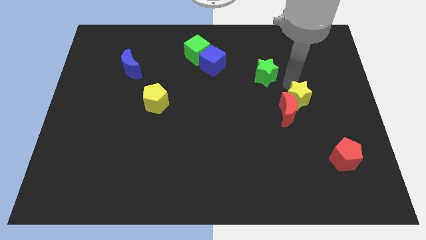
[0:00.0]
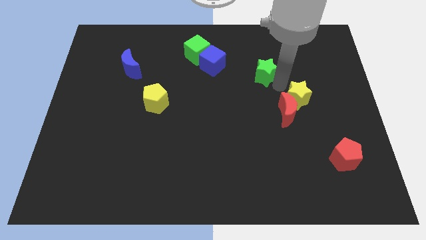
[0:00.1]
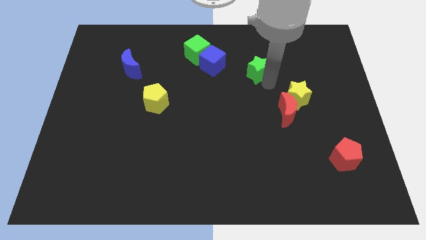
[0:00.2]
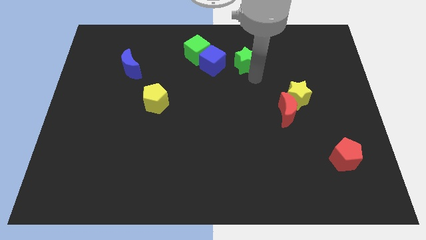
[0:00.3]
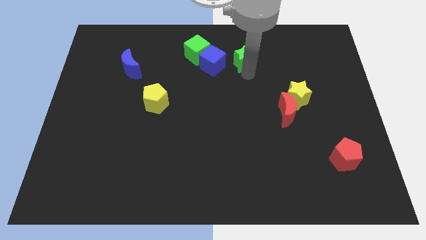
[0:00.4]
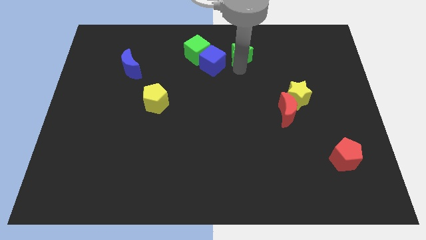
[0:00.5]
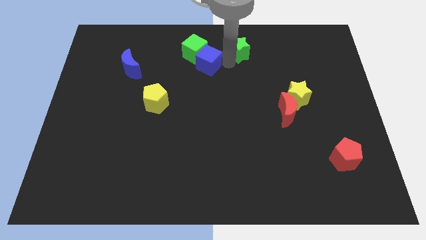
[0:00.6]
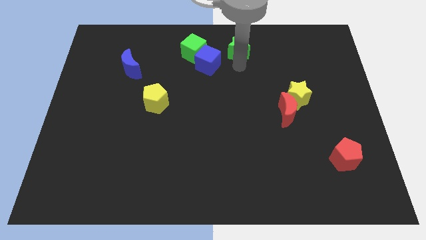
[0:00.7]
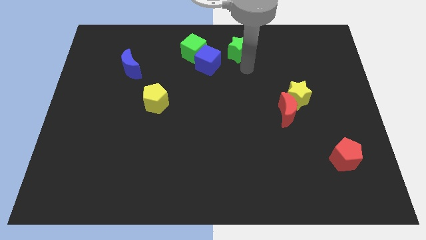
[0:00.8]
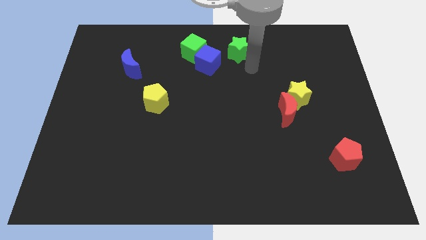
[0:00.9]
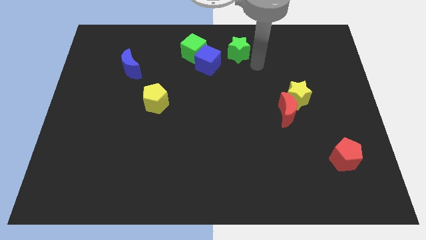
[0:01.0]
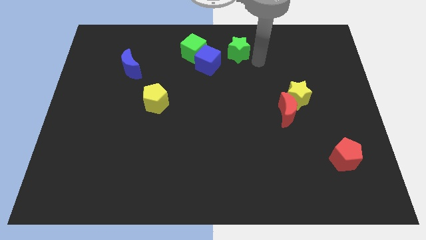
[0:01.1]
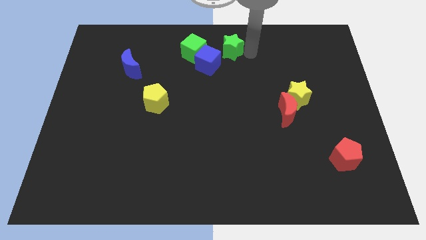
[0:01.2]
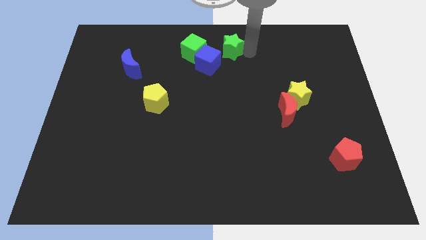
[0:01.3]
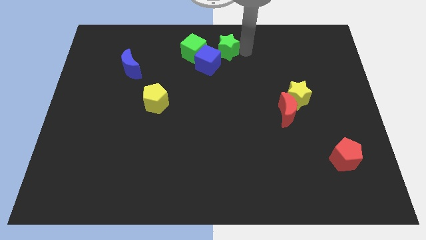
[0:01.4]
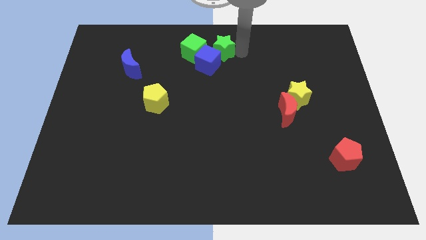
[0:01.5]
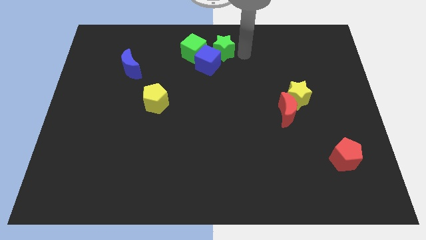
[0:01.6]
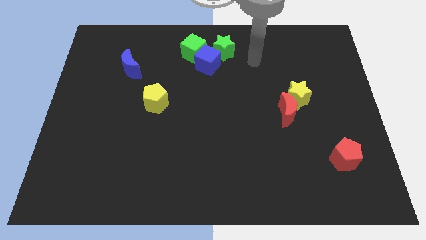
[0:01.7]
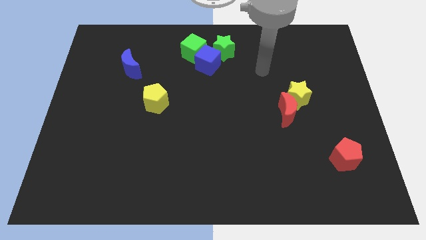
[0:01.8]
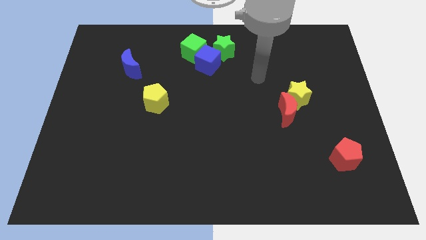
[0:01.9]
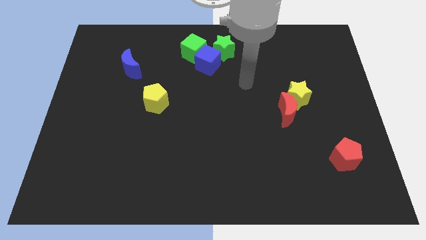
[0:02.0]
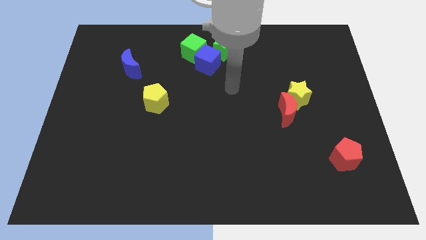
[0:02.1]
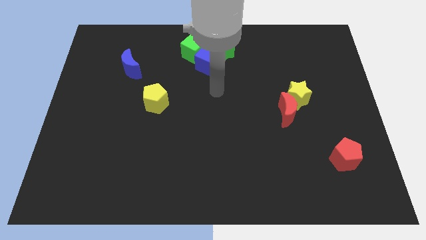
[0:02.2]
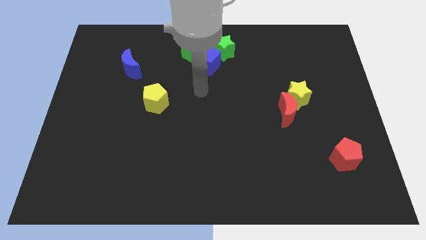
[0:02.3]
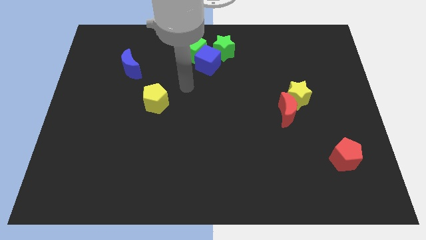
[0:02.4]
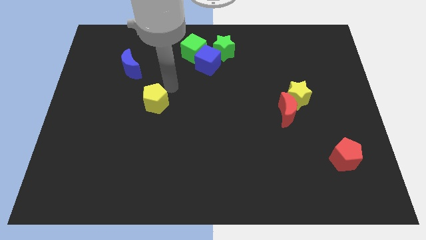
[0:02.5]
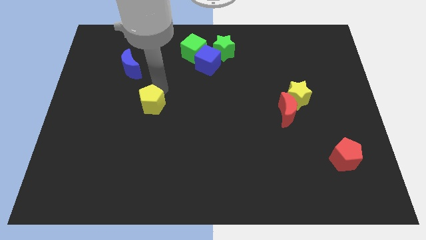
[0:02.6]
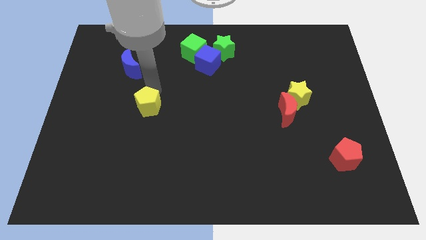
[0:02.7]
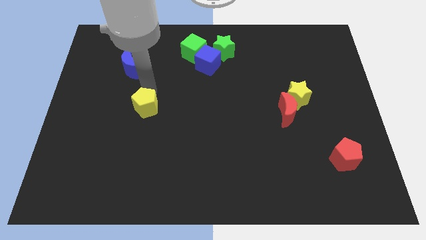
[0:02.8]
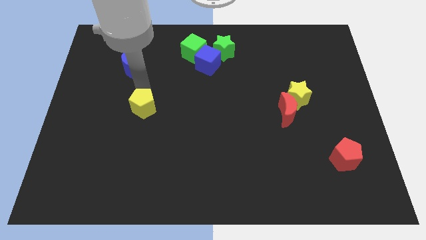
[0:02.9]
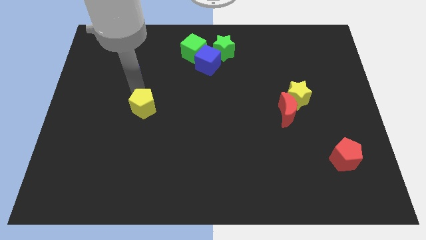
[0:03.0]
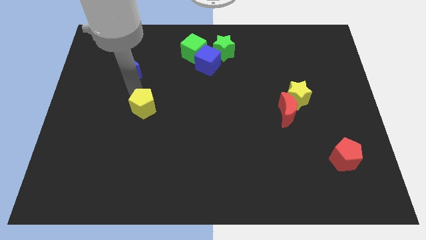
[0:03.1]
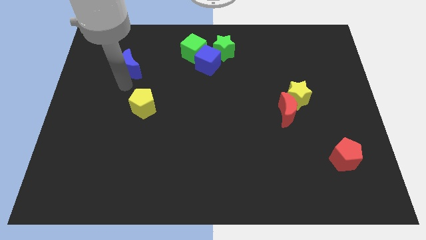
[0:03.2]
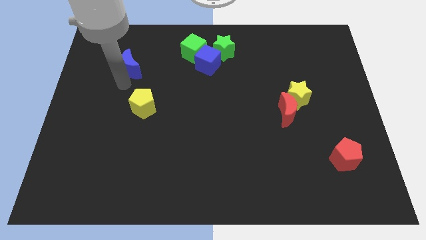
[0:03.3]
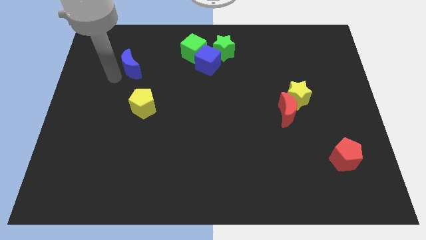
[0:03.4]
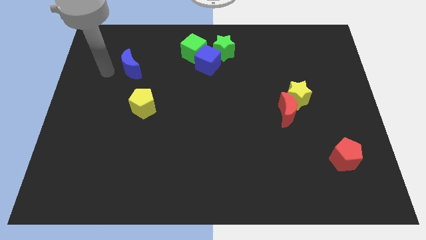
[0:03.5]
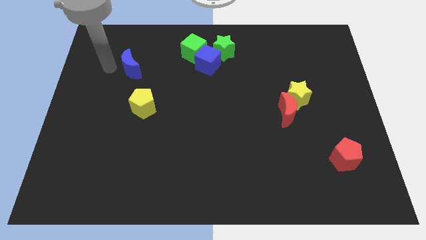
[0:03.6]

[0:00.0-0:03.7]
move away from the yellow star

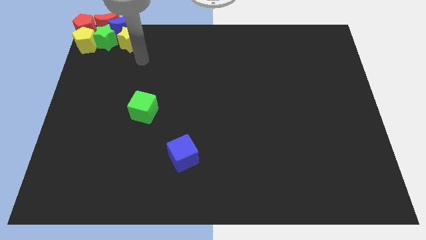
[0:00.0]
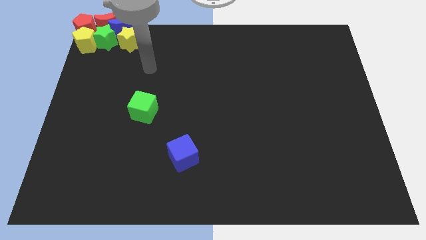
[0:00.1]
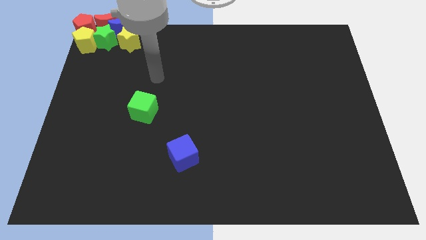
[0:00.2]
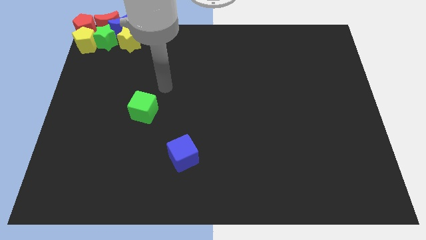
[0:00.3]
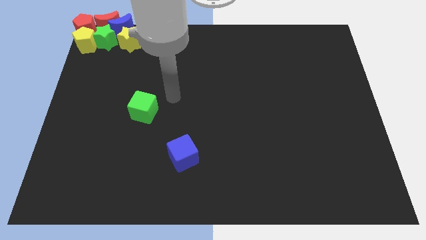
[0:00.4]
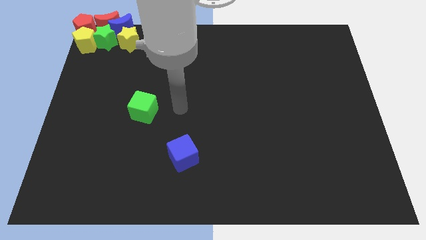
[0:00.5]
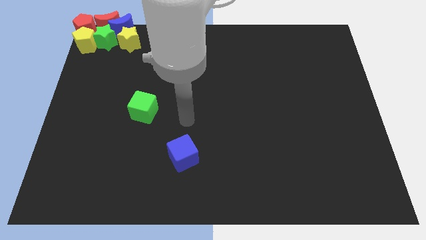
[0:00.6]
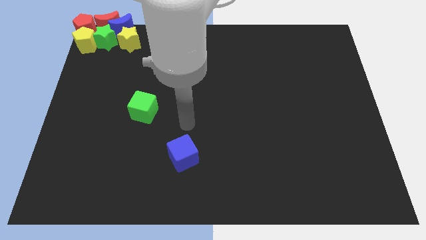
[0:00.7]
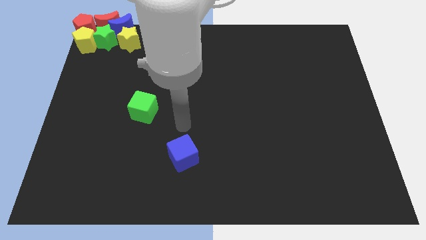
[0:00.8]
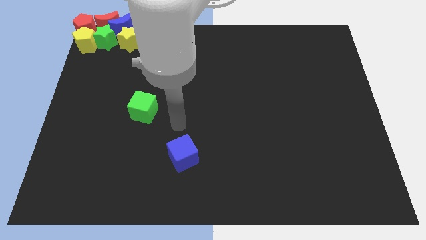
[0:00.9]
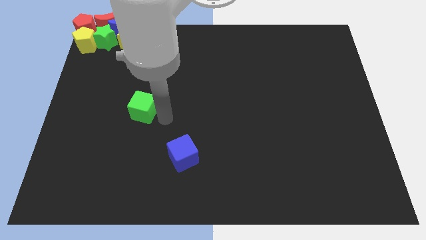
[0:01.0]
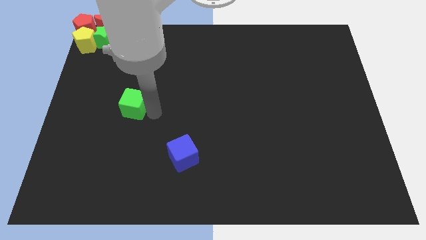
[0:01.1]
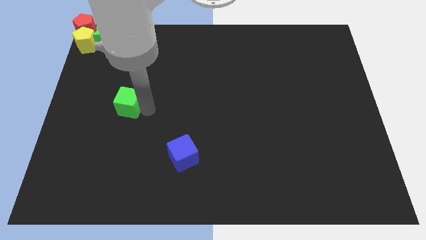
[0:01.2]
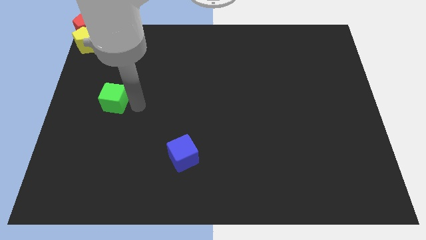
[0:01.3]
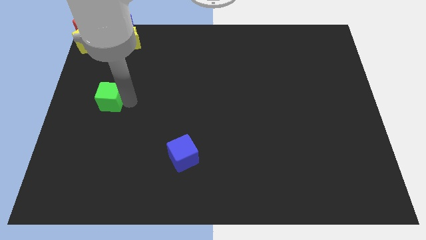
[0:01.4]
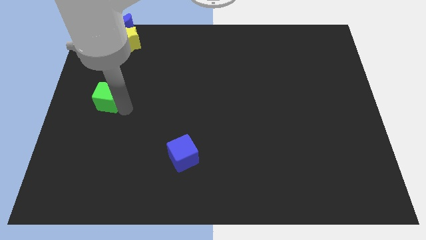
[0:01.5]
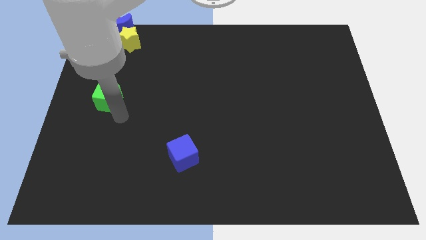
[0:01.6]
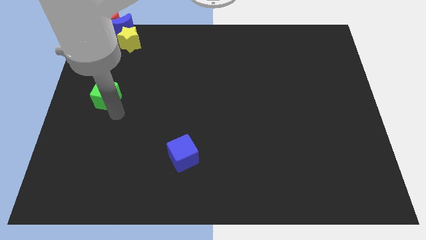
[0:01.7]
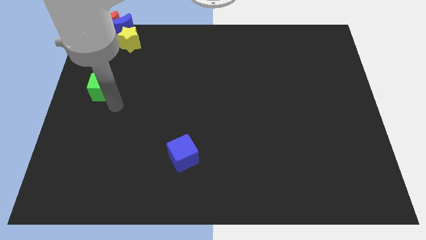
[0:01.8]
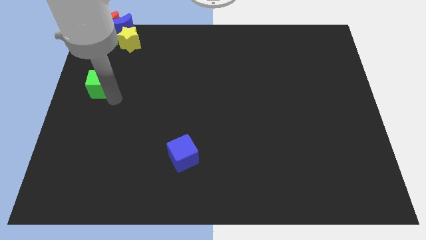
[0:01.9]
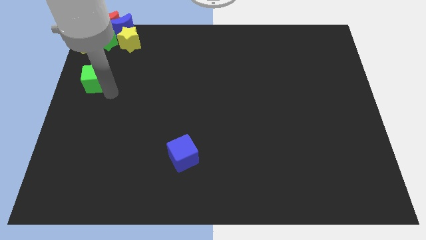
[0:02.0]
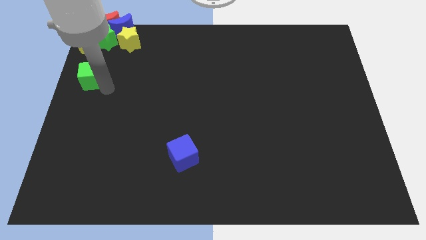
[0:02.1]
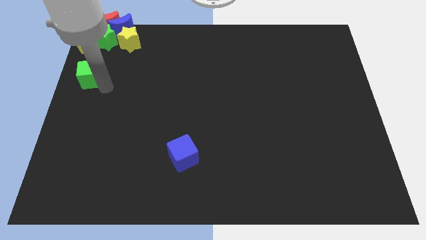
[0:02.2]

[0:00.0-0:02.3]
move the green cube towards the top left

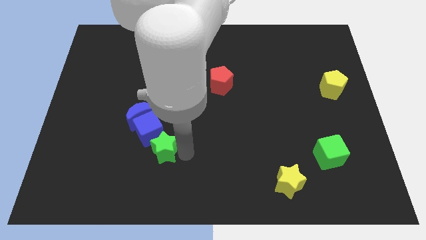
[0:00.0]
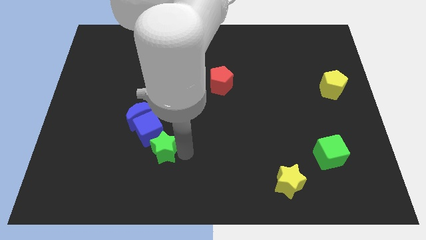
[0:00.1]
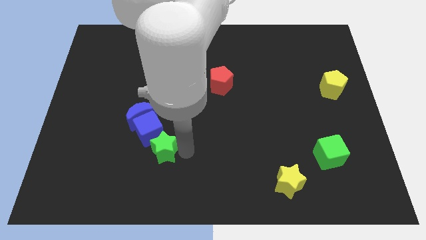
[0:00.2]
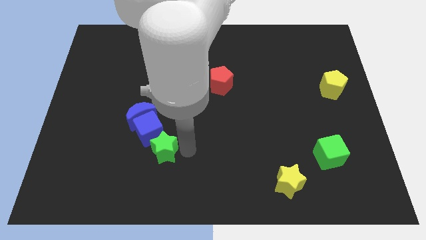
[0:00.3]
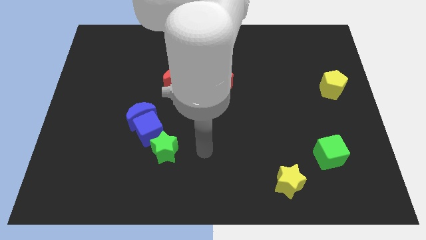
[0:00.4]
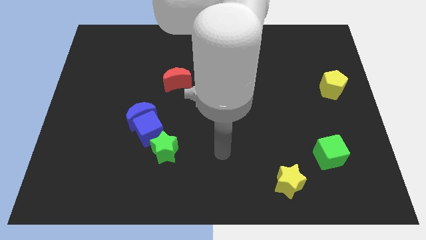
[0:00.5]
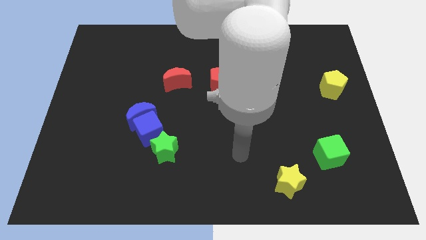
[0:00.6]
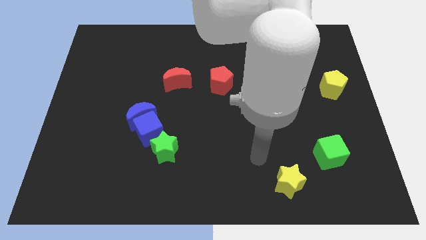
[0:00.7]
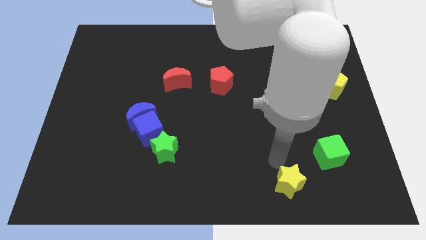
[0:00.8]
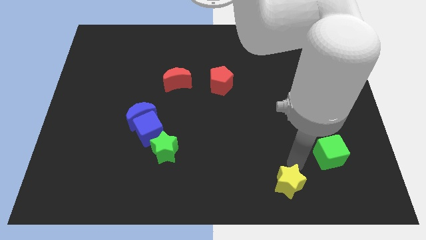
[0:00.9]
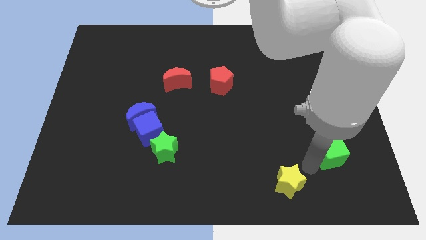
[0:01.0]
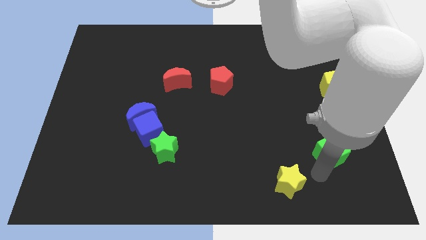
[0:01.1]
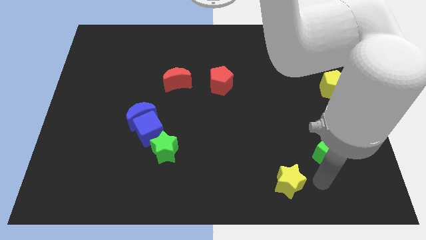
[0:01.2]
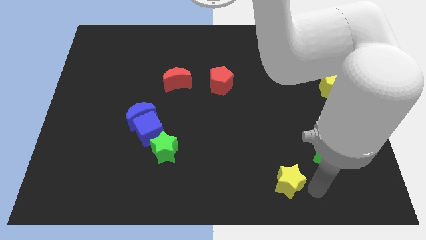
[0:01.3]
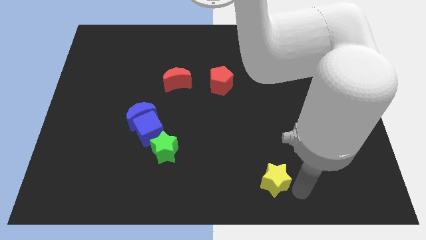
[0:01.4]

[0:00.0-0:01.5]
move the arm around the yellow star

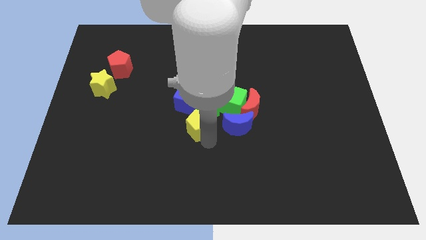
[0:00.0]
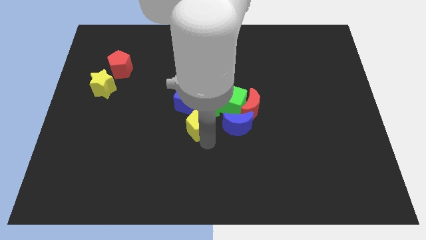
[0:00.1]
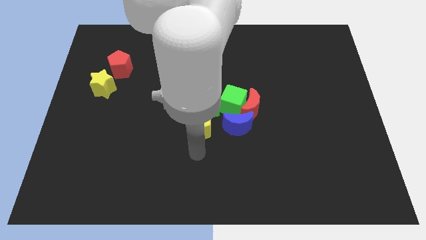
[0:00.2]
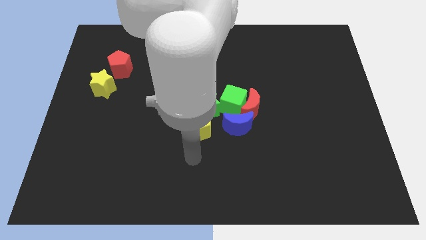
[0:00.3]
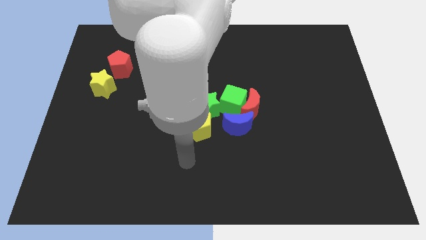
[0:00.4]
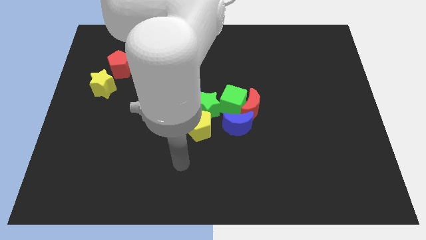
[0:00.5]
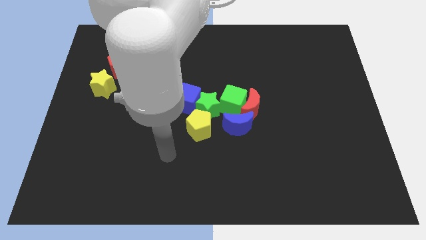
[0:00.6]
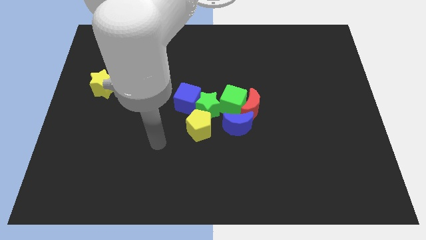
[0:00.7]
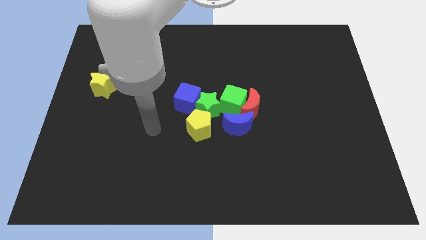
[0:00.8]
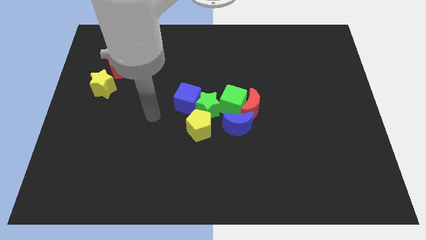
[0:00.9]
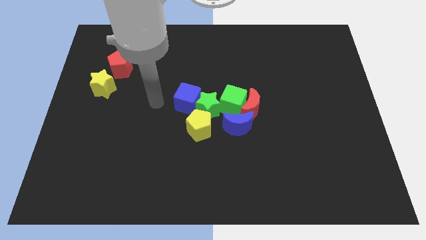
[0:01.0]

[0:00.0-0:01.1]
slide the pointer away from the yellow pentagon

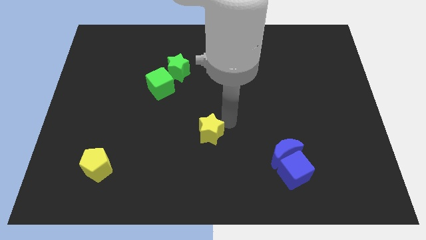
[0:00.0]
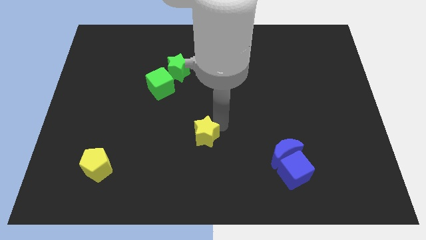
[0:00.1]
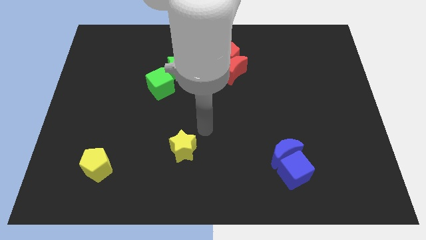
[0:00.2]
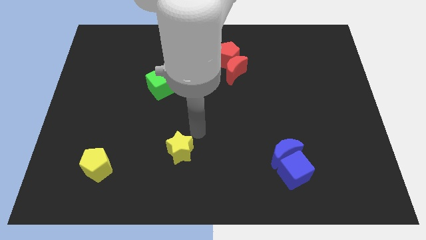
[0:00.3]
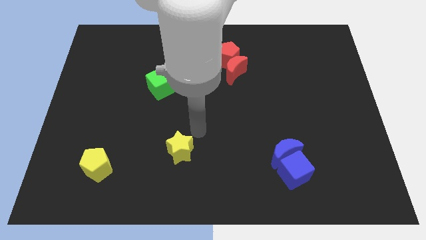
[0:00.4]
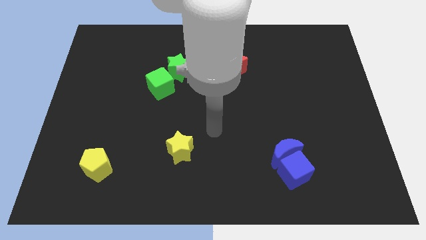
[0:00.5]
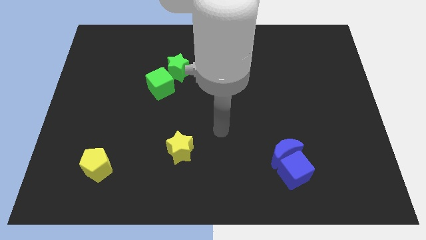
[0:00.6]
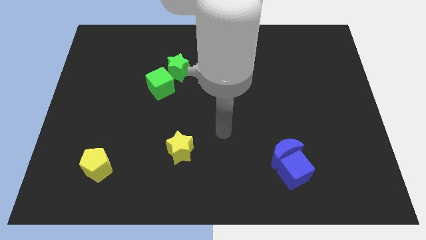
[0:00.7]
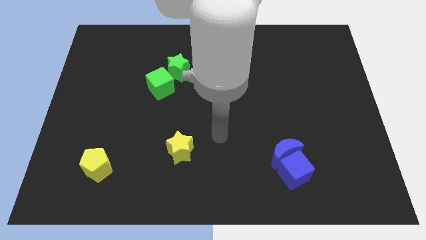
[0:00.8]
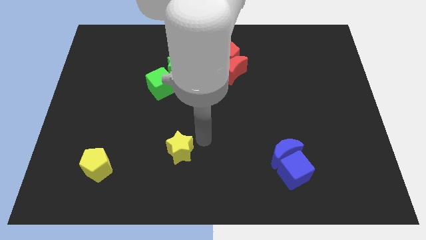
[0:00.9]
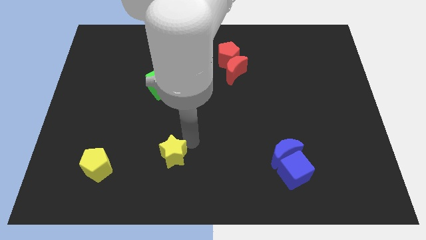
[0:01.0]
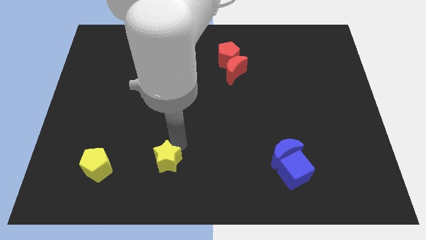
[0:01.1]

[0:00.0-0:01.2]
push the yellow star towards the bottom side of the board
